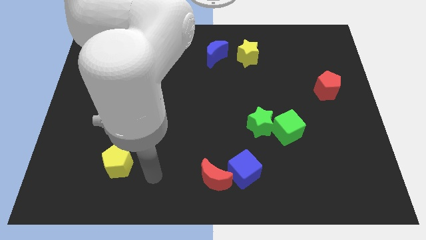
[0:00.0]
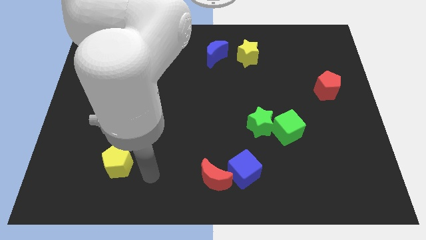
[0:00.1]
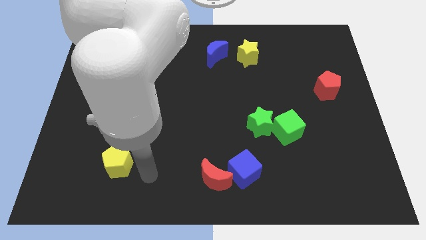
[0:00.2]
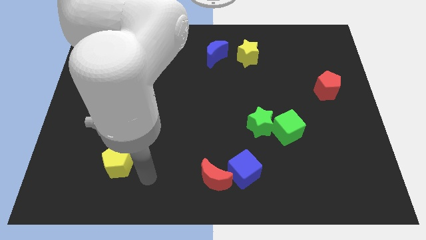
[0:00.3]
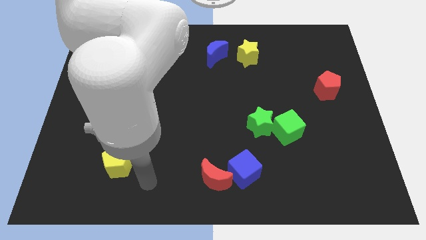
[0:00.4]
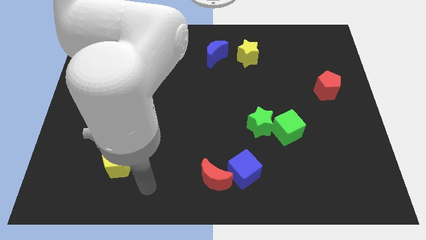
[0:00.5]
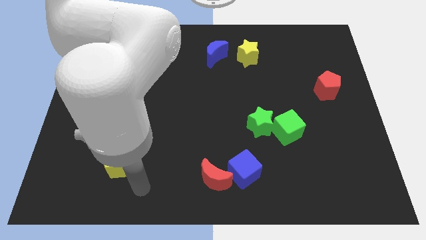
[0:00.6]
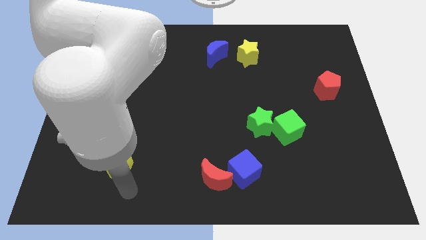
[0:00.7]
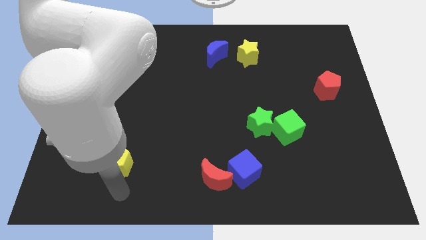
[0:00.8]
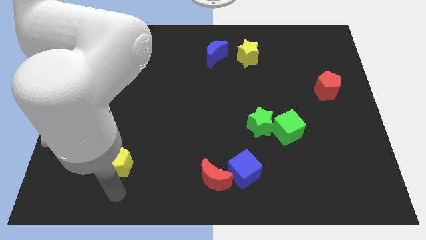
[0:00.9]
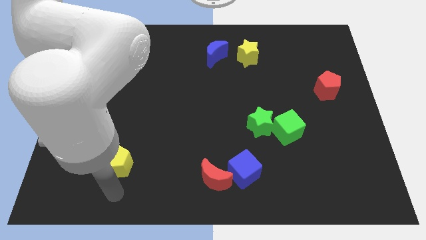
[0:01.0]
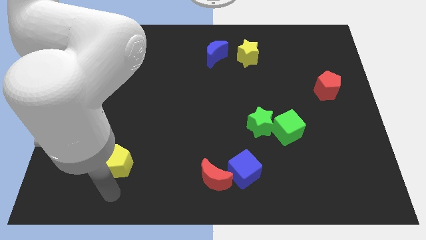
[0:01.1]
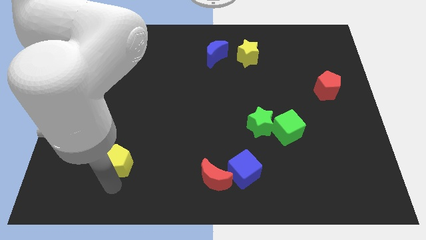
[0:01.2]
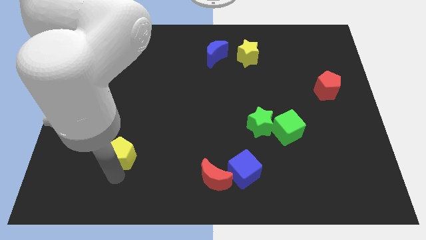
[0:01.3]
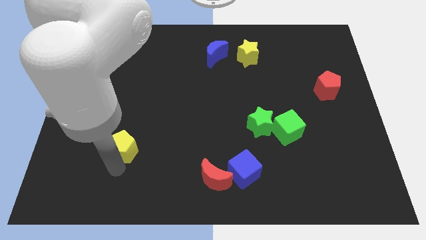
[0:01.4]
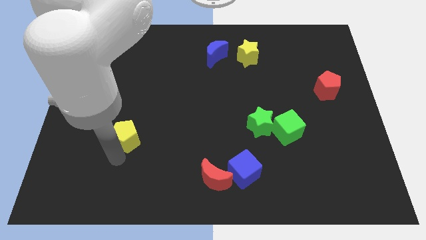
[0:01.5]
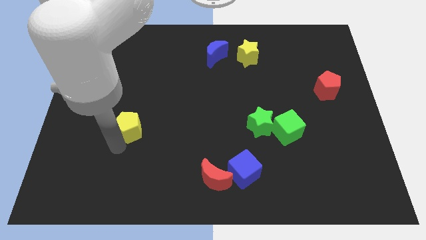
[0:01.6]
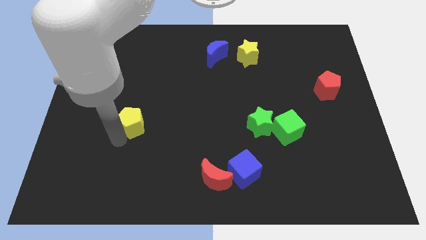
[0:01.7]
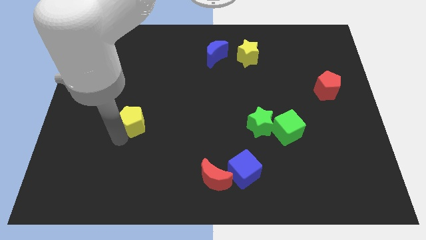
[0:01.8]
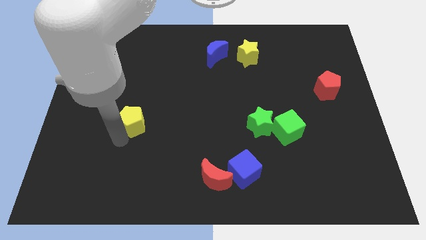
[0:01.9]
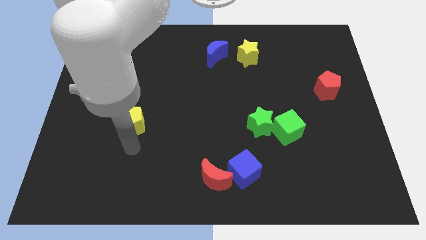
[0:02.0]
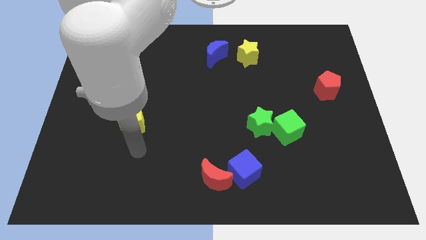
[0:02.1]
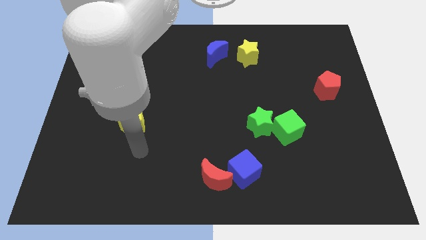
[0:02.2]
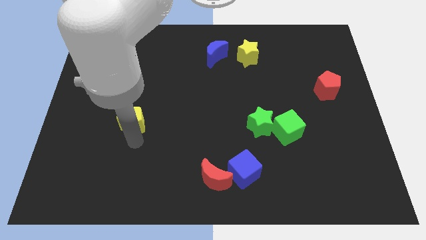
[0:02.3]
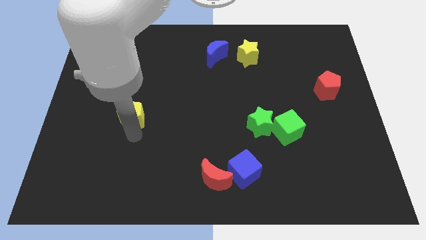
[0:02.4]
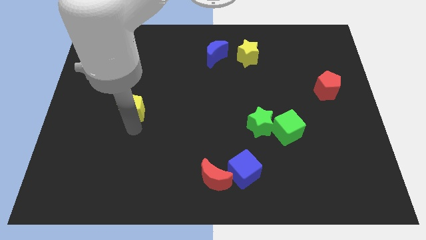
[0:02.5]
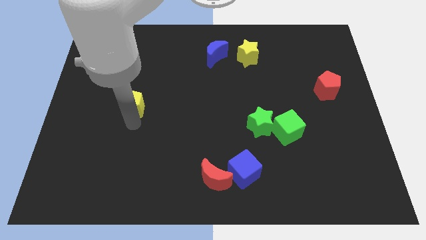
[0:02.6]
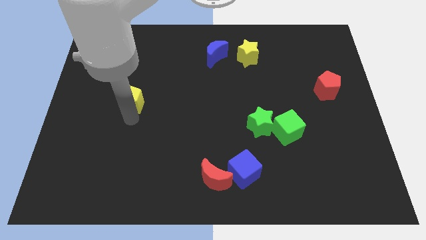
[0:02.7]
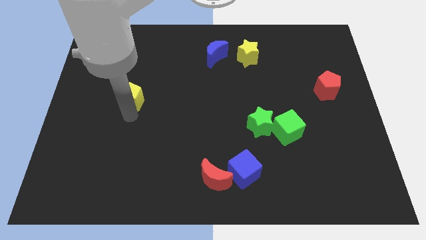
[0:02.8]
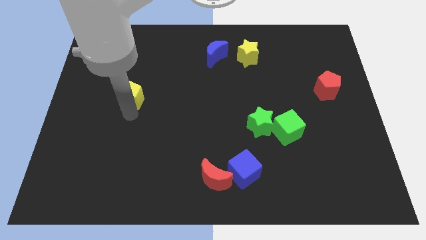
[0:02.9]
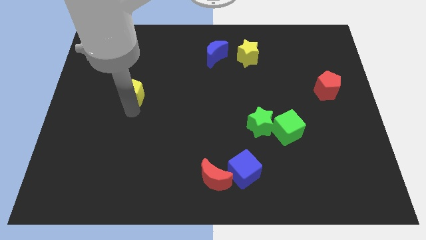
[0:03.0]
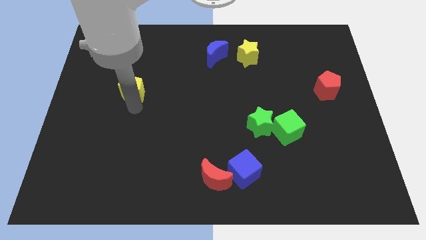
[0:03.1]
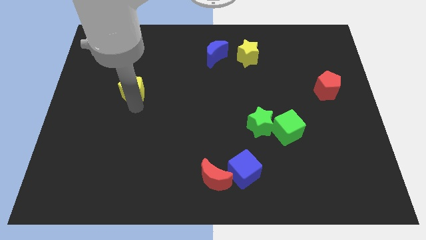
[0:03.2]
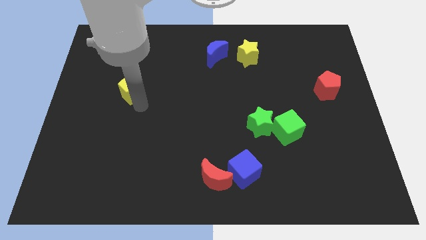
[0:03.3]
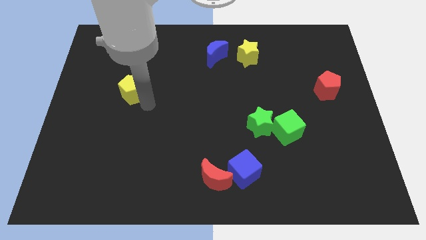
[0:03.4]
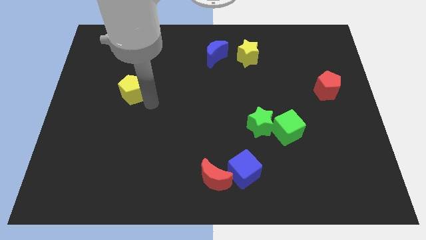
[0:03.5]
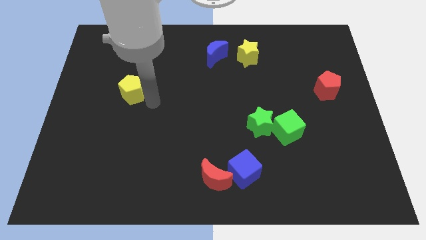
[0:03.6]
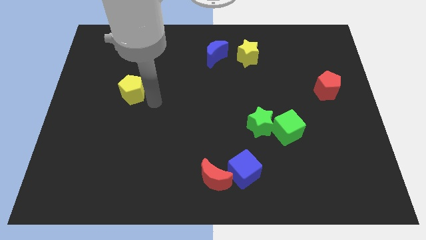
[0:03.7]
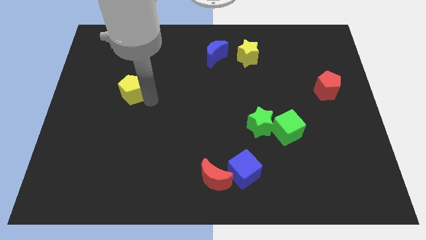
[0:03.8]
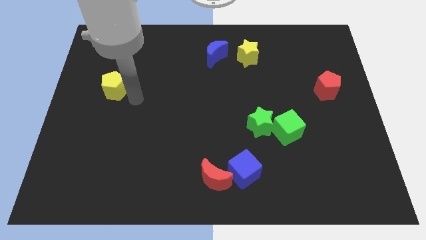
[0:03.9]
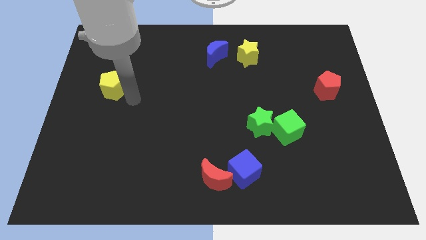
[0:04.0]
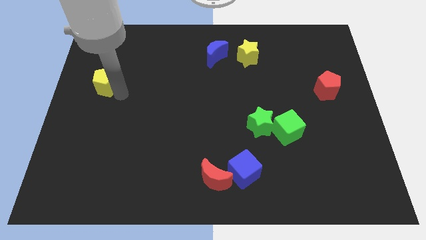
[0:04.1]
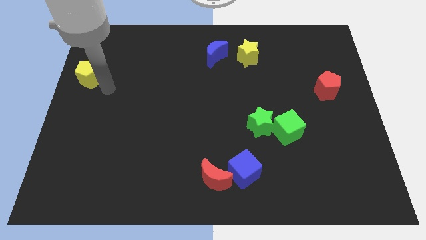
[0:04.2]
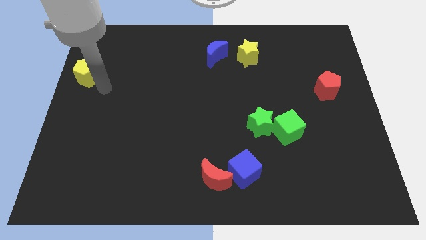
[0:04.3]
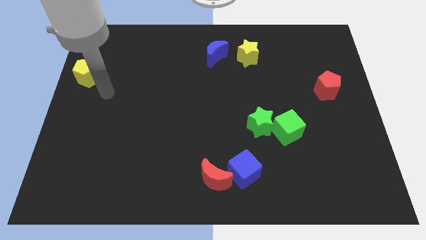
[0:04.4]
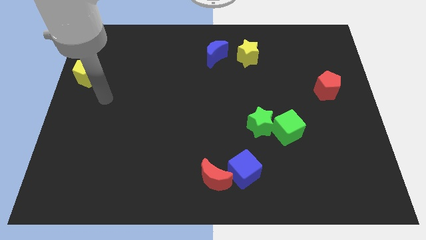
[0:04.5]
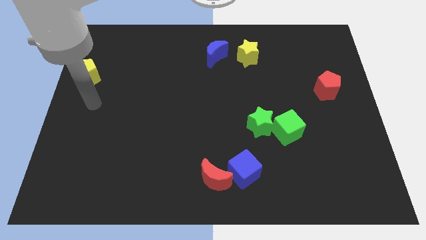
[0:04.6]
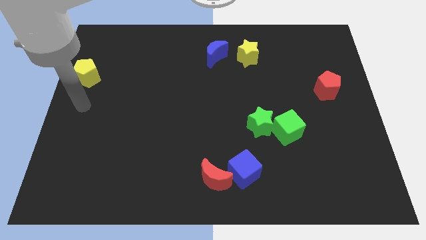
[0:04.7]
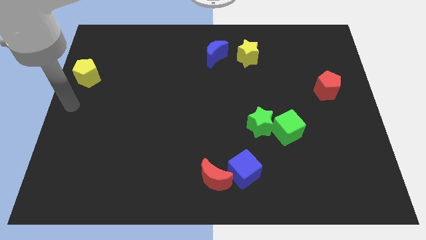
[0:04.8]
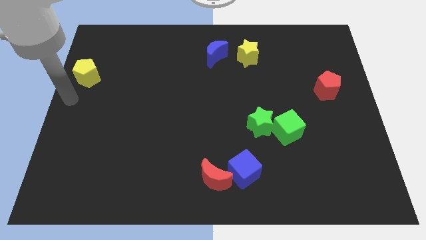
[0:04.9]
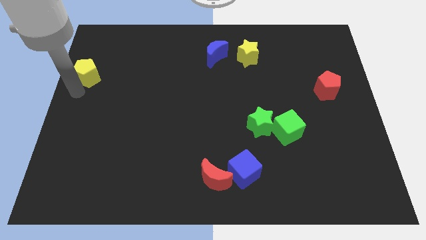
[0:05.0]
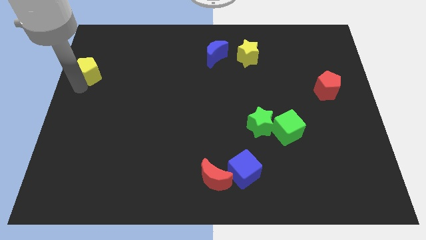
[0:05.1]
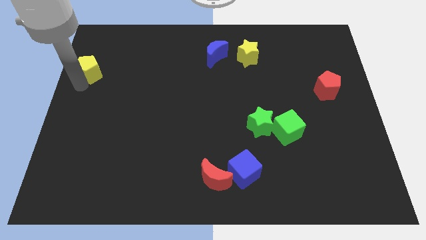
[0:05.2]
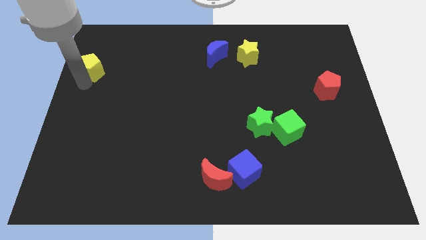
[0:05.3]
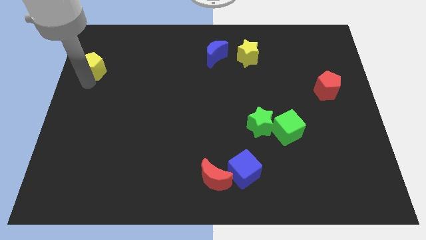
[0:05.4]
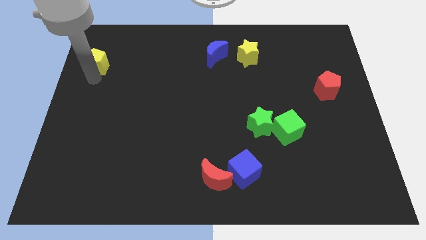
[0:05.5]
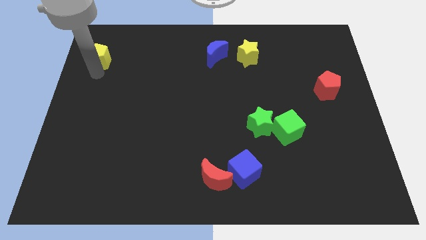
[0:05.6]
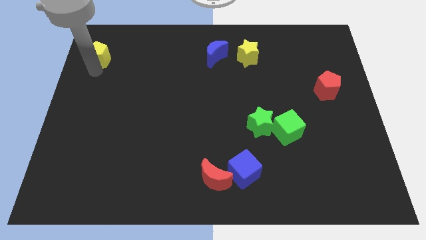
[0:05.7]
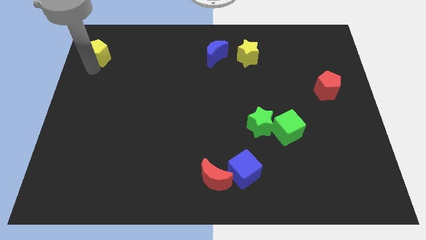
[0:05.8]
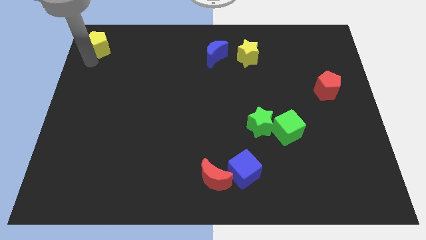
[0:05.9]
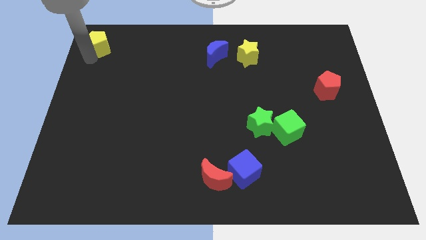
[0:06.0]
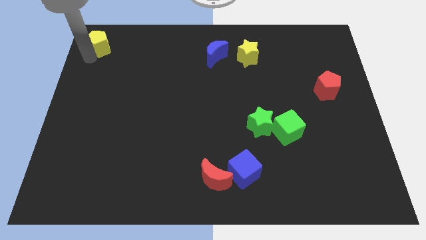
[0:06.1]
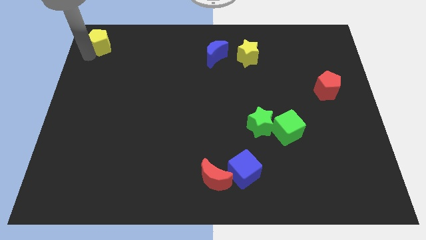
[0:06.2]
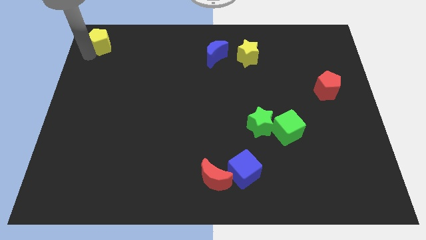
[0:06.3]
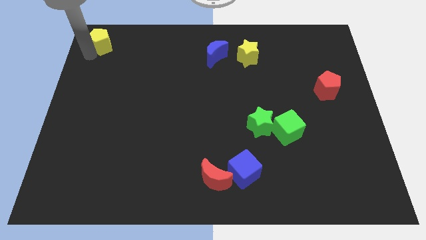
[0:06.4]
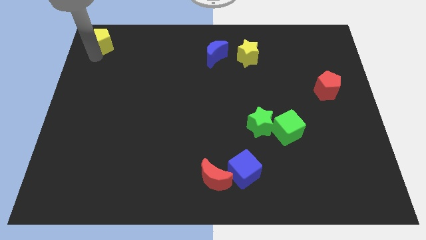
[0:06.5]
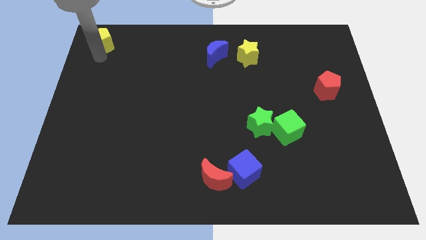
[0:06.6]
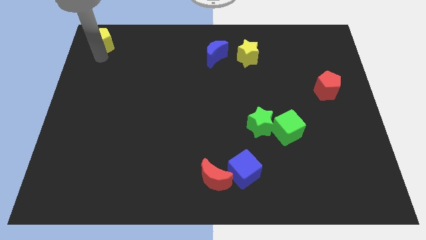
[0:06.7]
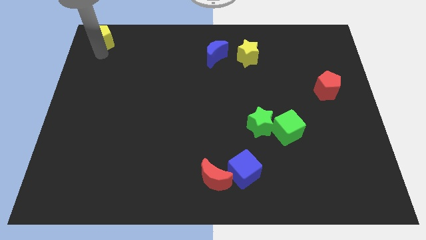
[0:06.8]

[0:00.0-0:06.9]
push the yellow pentagon to the top left of the board

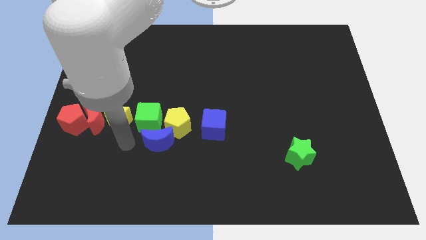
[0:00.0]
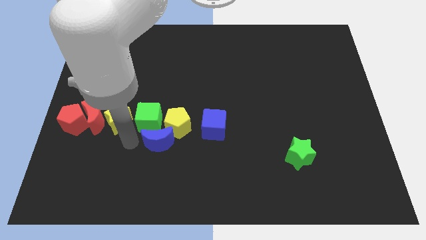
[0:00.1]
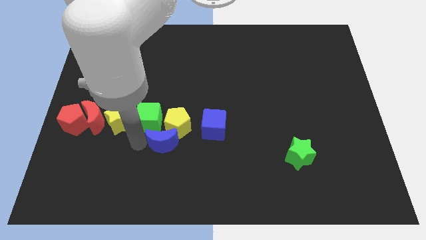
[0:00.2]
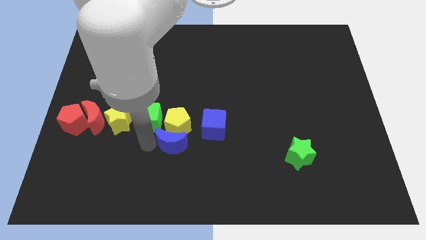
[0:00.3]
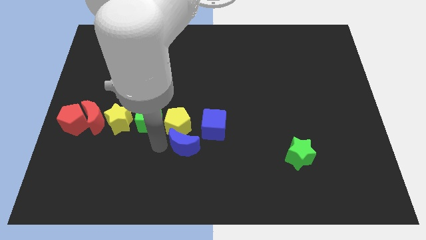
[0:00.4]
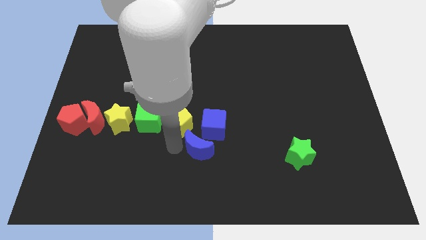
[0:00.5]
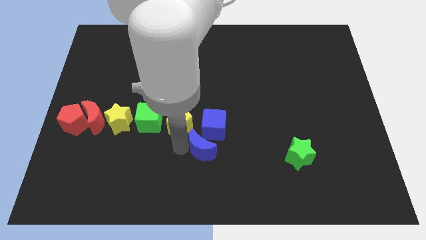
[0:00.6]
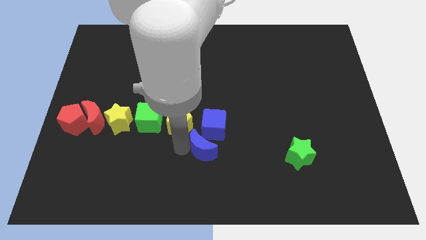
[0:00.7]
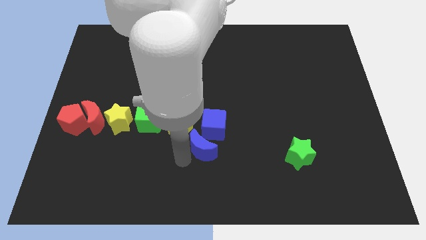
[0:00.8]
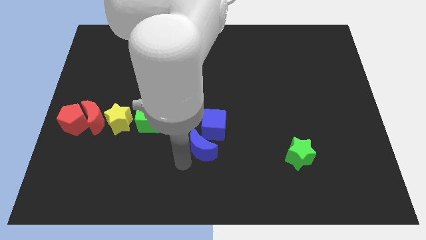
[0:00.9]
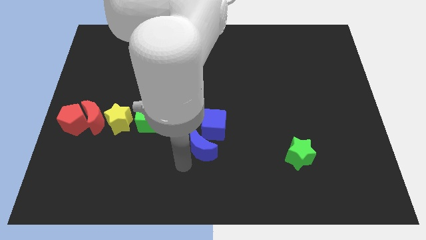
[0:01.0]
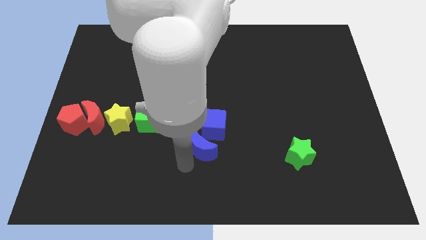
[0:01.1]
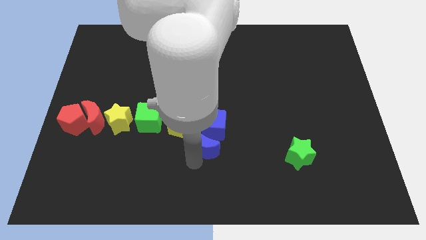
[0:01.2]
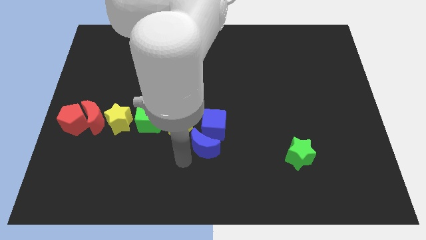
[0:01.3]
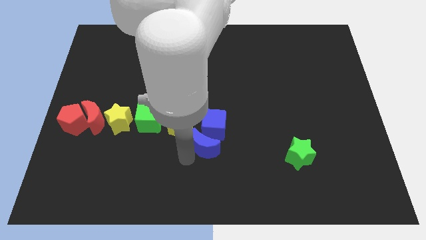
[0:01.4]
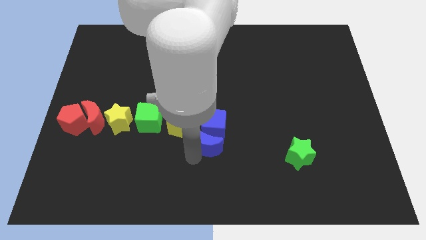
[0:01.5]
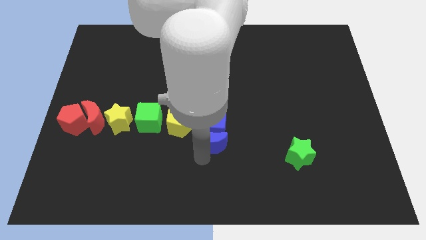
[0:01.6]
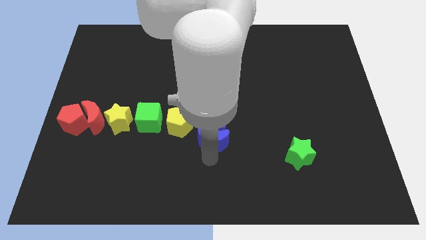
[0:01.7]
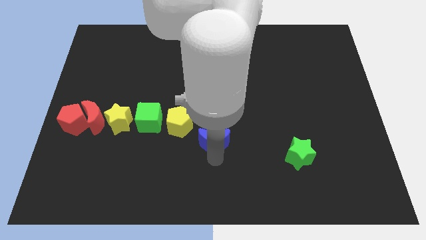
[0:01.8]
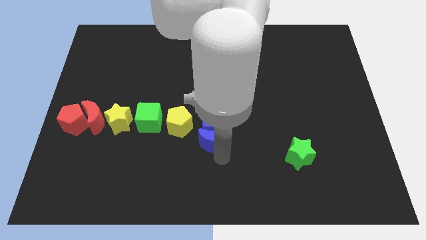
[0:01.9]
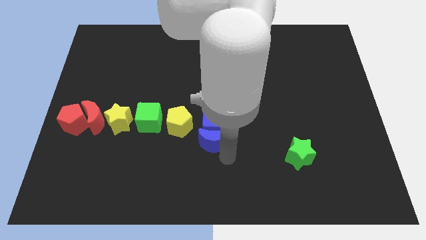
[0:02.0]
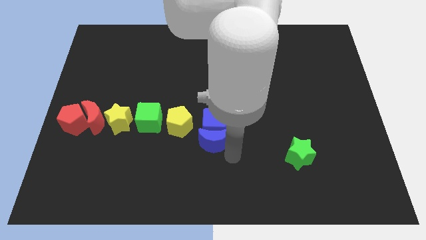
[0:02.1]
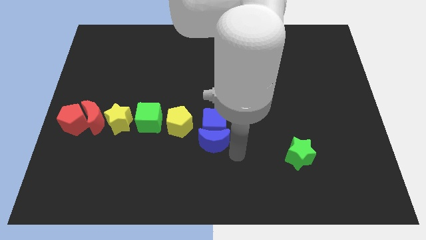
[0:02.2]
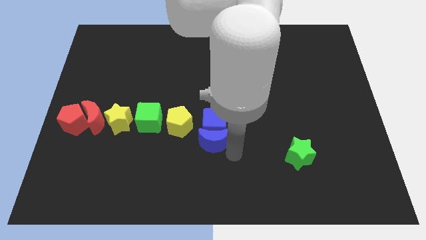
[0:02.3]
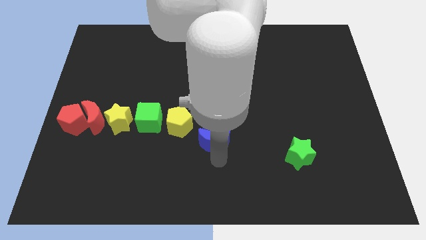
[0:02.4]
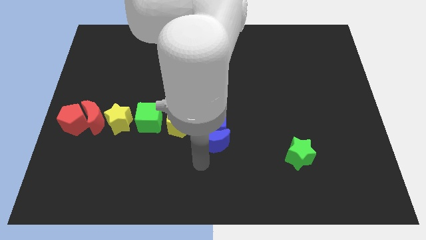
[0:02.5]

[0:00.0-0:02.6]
move the blue crescent into the blue cube
